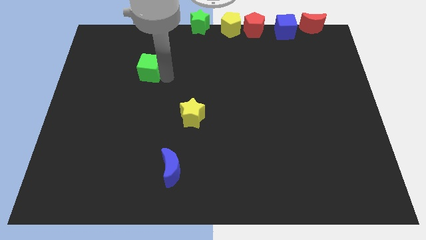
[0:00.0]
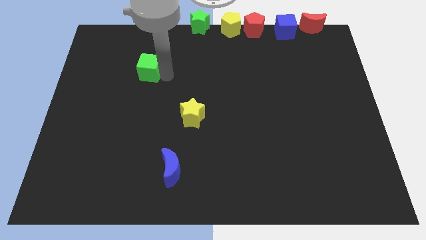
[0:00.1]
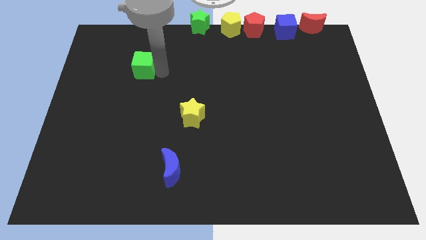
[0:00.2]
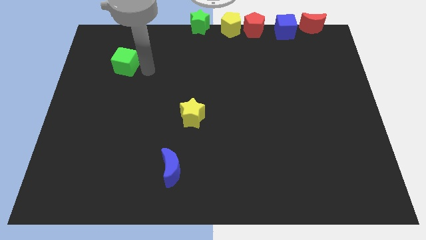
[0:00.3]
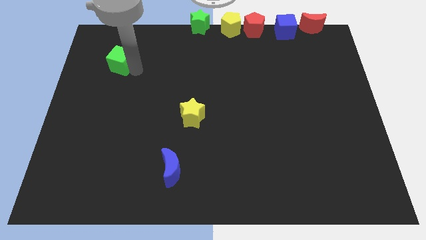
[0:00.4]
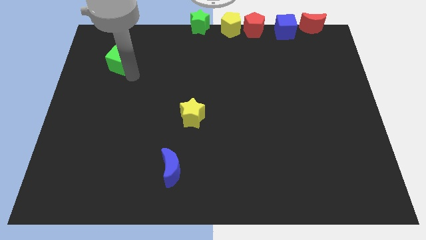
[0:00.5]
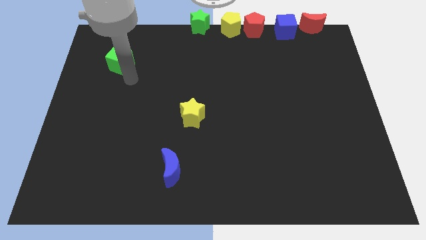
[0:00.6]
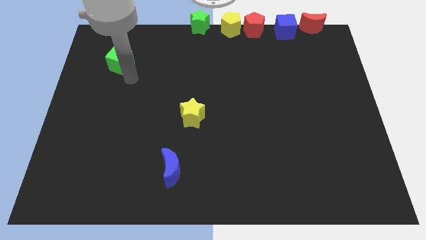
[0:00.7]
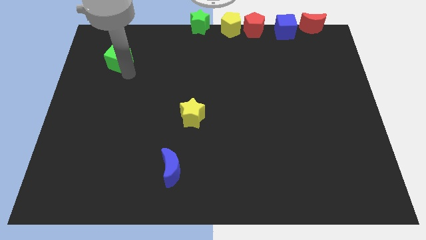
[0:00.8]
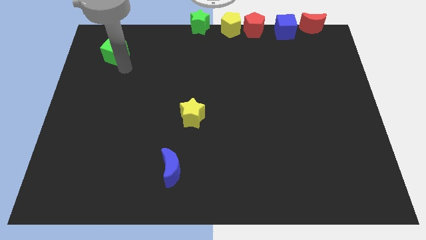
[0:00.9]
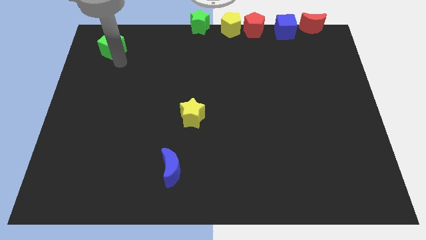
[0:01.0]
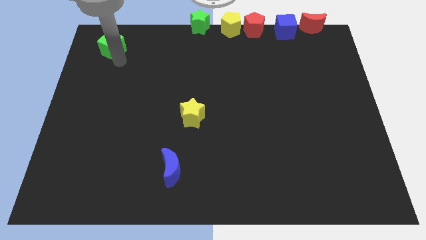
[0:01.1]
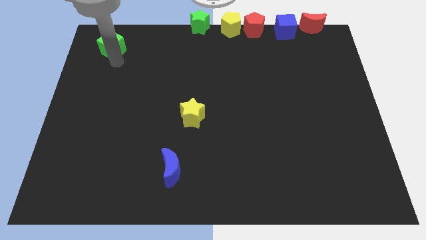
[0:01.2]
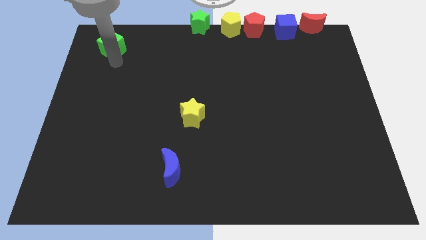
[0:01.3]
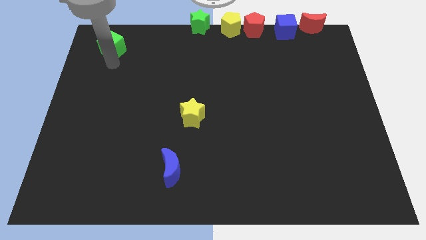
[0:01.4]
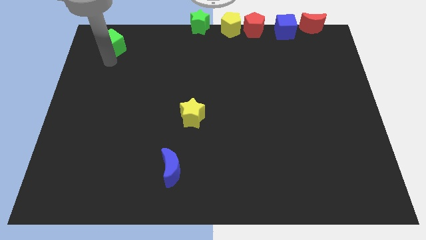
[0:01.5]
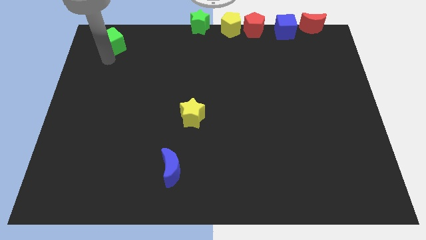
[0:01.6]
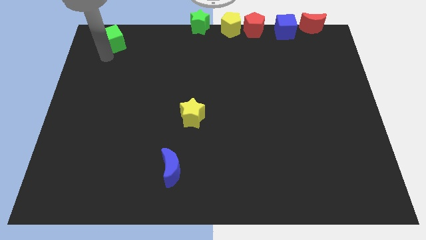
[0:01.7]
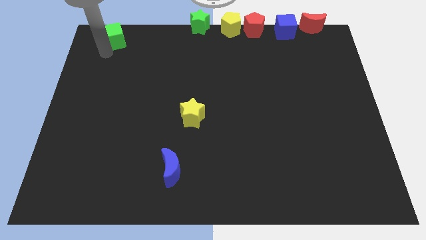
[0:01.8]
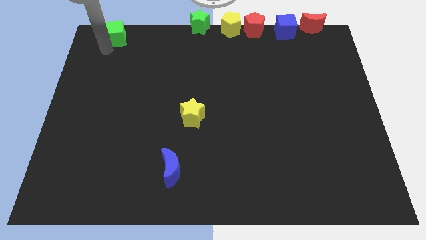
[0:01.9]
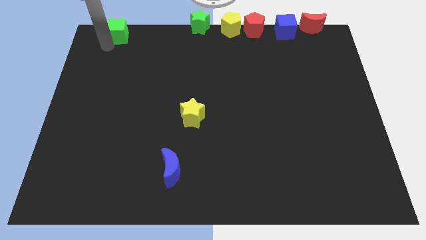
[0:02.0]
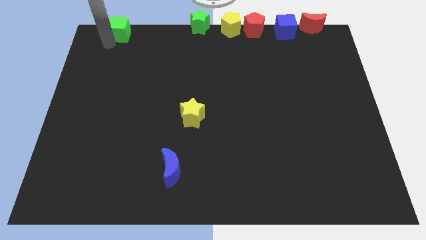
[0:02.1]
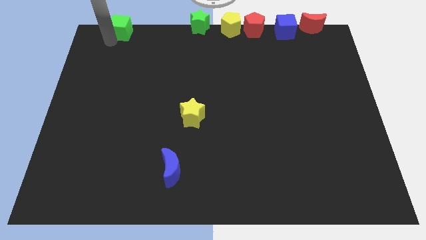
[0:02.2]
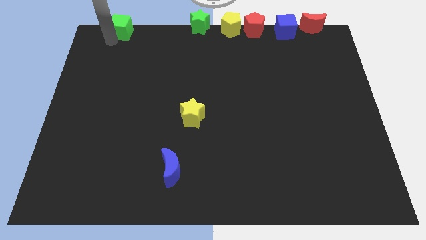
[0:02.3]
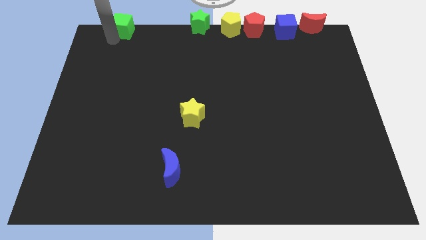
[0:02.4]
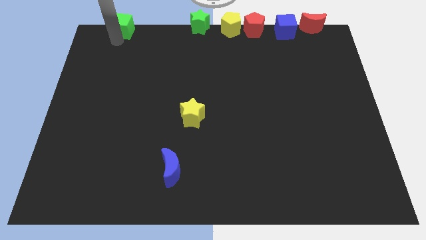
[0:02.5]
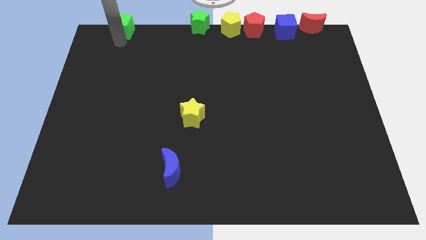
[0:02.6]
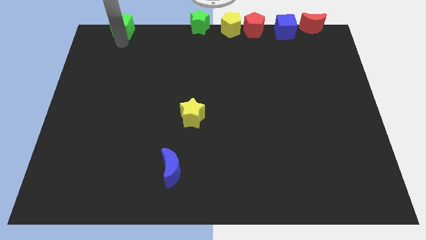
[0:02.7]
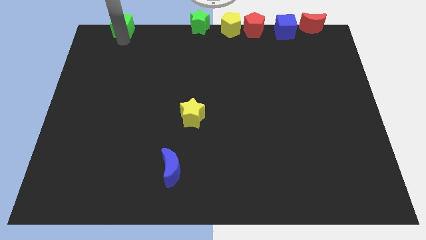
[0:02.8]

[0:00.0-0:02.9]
slide the green cube to the top left of the board

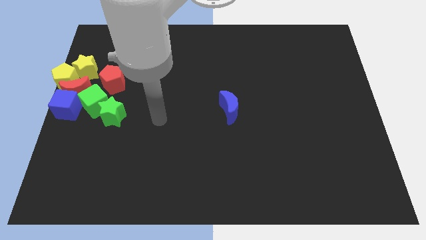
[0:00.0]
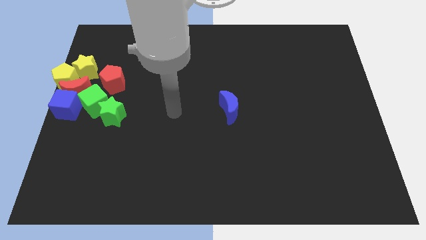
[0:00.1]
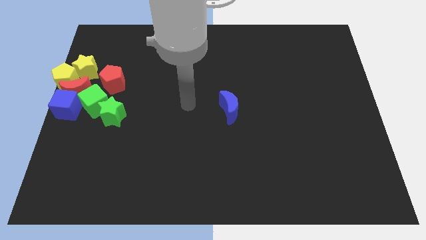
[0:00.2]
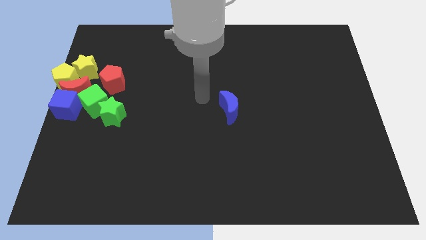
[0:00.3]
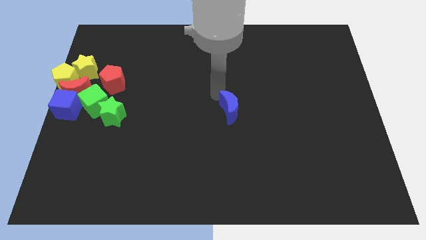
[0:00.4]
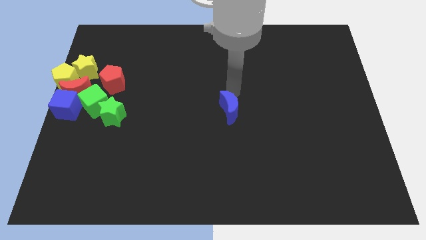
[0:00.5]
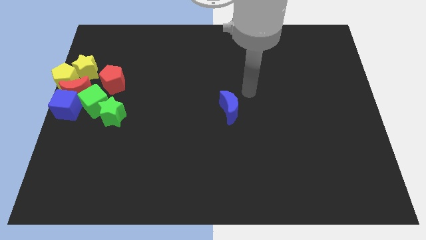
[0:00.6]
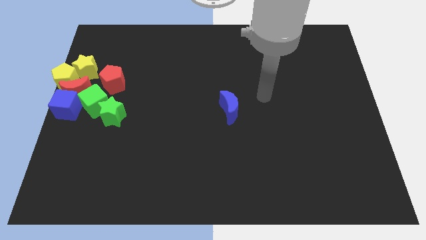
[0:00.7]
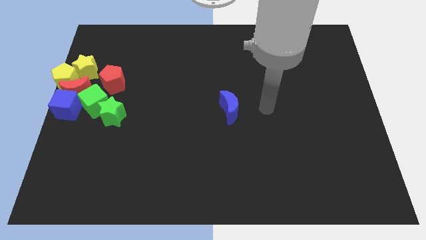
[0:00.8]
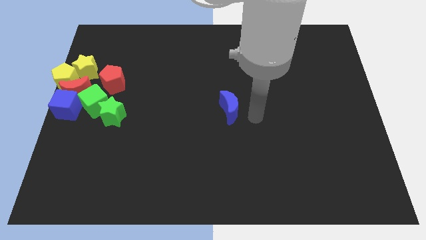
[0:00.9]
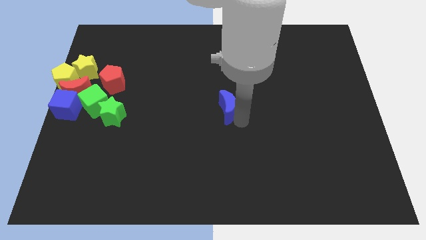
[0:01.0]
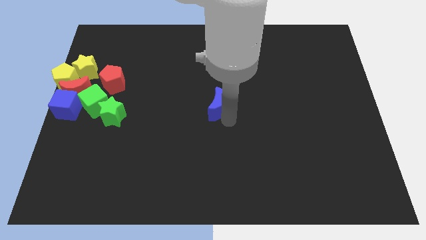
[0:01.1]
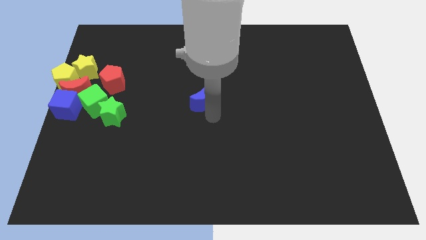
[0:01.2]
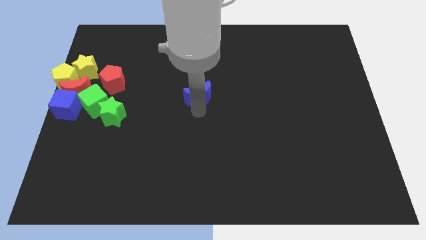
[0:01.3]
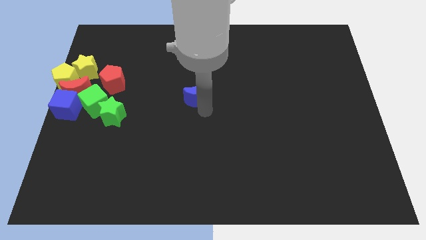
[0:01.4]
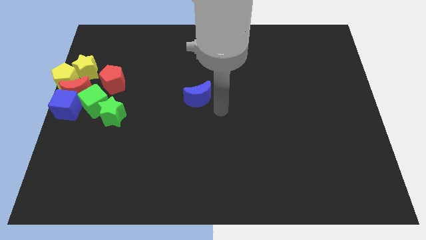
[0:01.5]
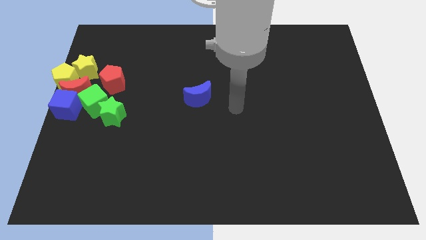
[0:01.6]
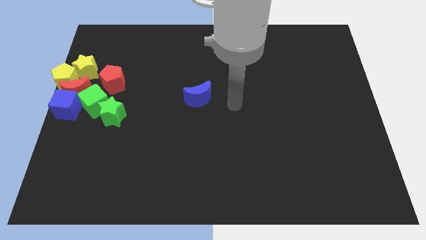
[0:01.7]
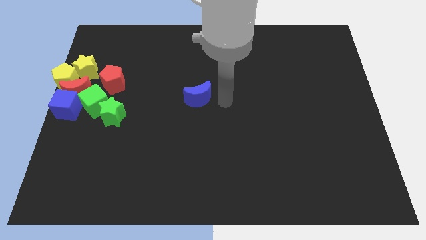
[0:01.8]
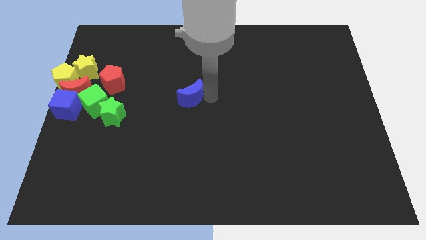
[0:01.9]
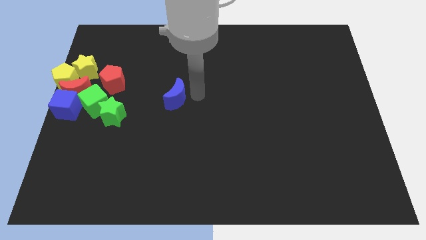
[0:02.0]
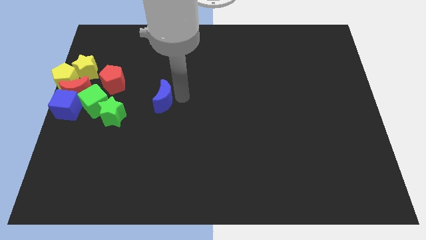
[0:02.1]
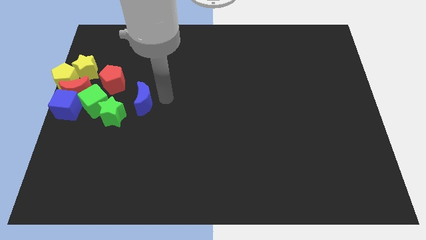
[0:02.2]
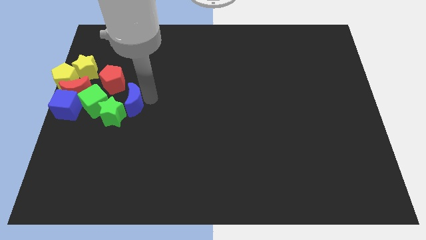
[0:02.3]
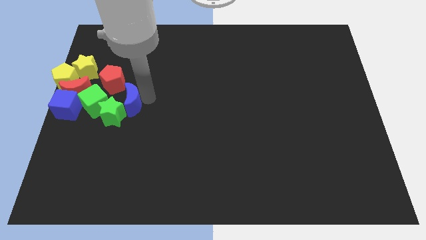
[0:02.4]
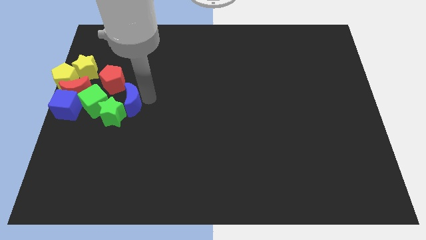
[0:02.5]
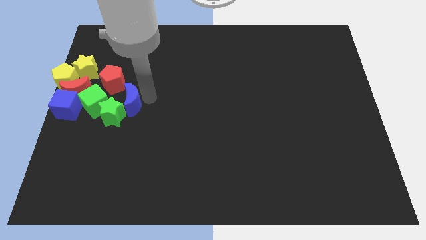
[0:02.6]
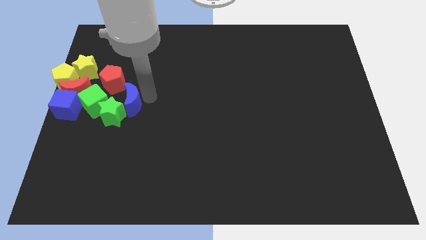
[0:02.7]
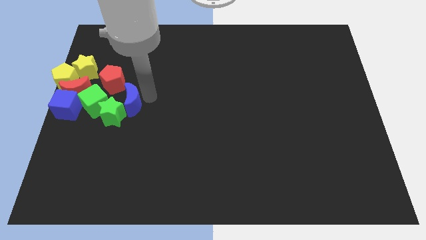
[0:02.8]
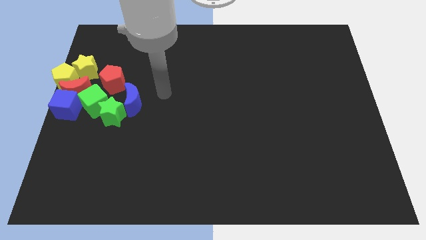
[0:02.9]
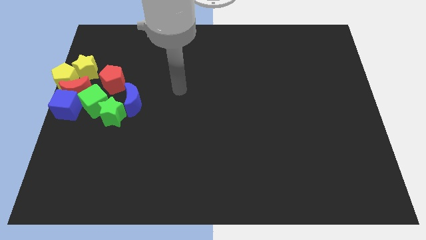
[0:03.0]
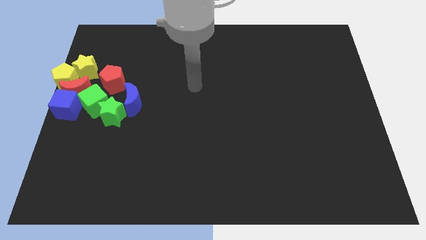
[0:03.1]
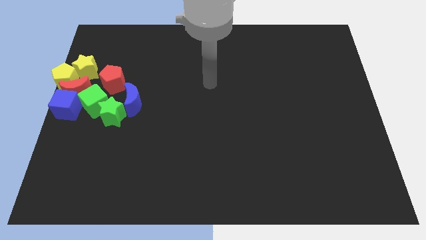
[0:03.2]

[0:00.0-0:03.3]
add the blue crescent to the group of blocks at the left center of the board

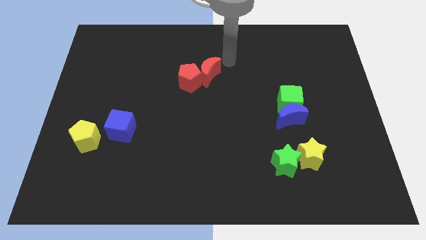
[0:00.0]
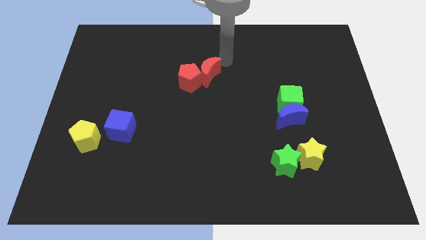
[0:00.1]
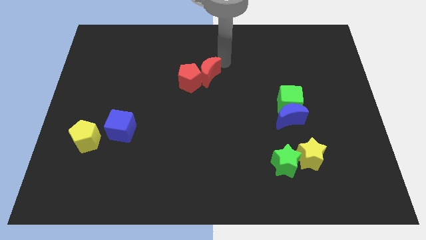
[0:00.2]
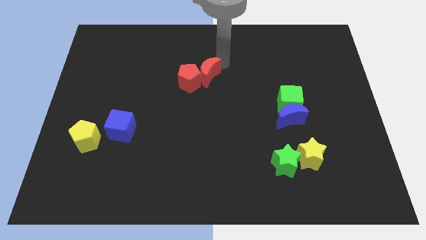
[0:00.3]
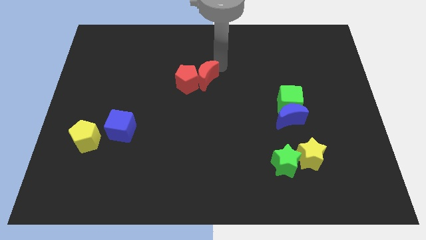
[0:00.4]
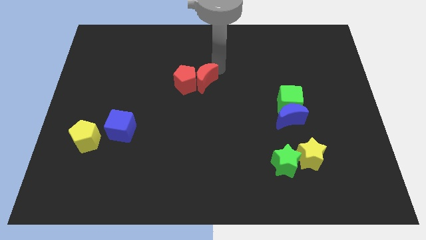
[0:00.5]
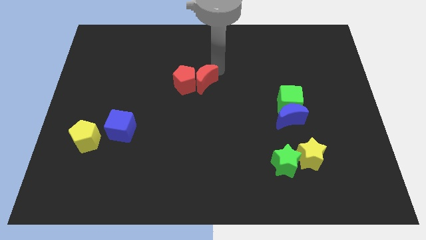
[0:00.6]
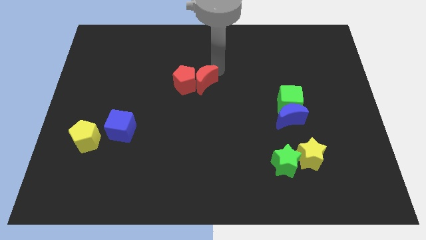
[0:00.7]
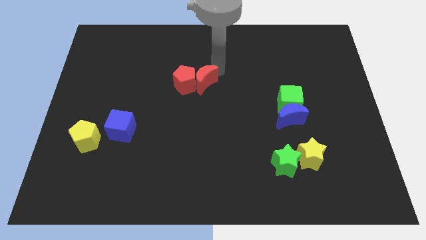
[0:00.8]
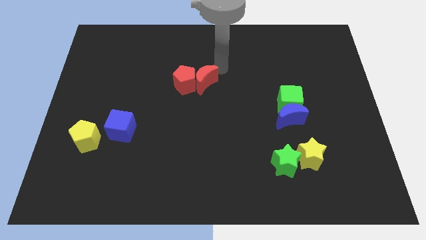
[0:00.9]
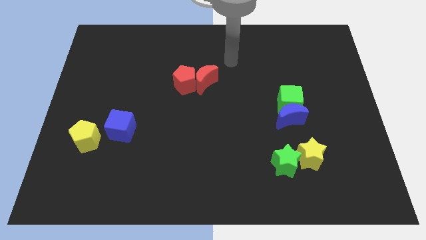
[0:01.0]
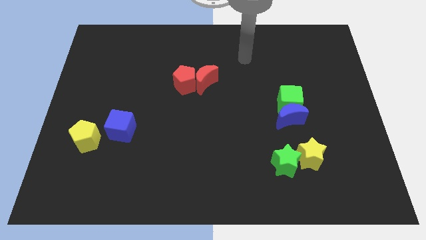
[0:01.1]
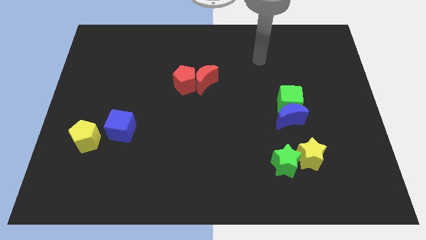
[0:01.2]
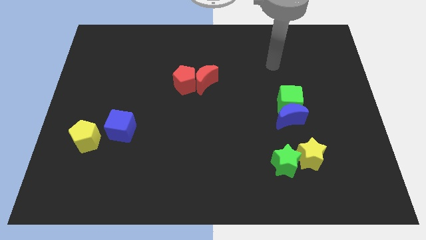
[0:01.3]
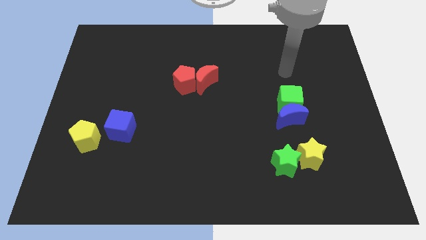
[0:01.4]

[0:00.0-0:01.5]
slightly push the red blocks towards the center

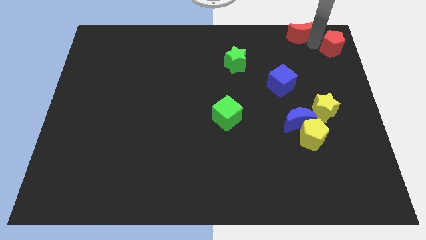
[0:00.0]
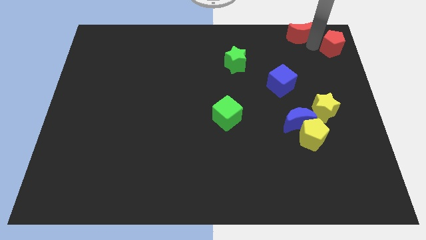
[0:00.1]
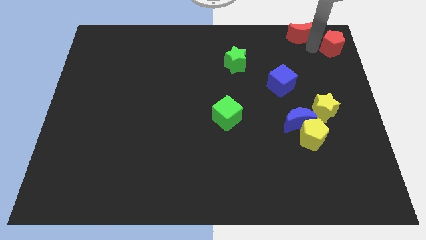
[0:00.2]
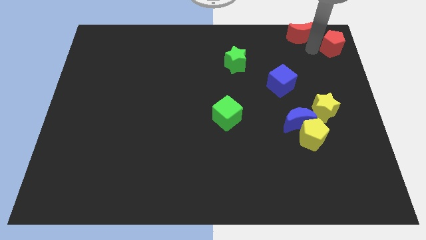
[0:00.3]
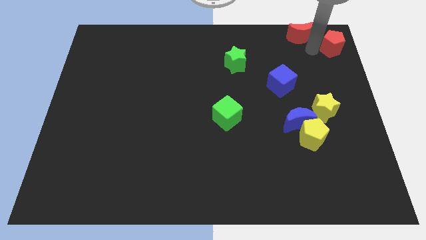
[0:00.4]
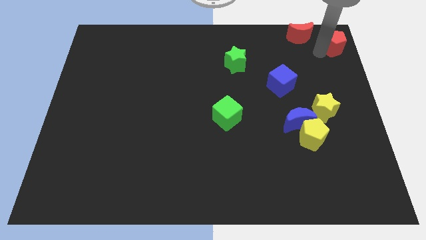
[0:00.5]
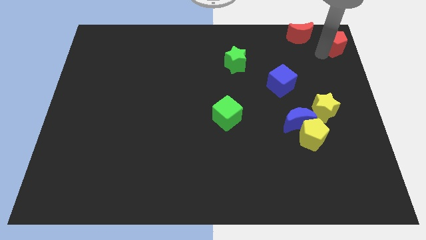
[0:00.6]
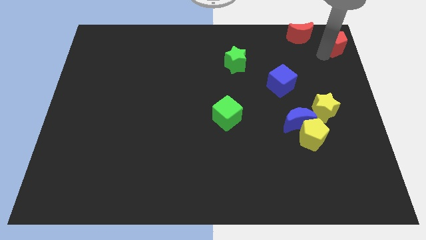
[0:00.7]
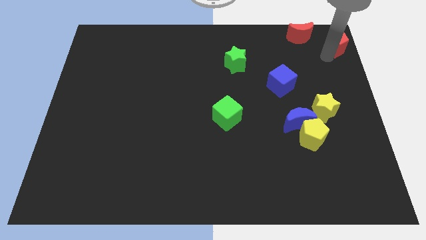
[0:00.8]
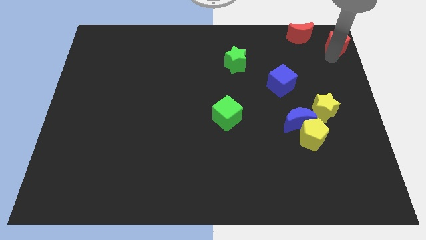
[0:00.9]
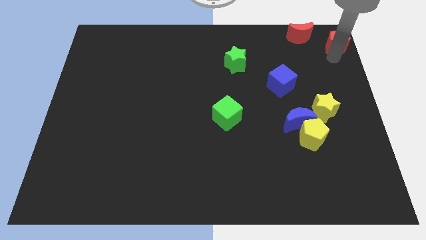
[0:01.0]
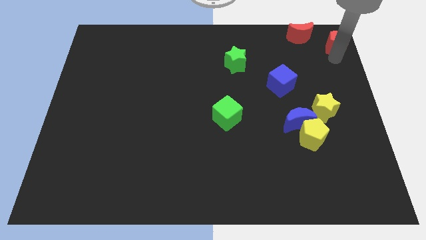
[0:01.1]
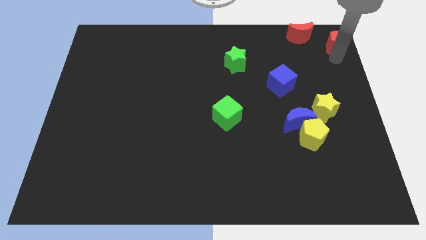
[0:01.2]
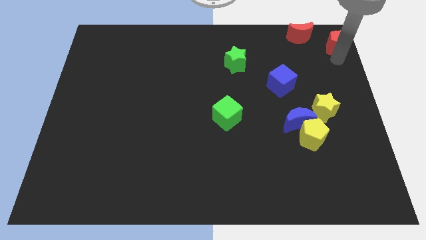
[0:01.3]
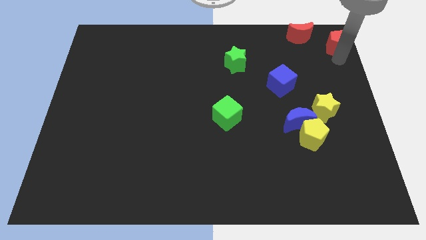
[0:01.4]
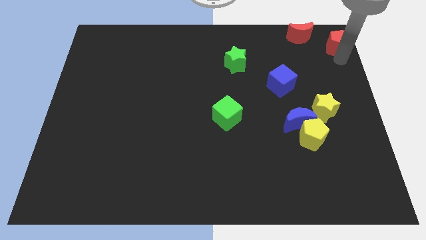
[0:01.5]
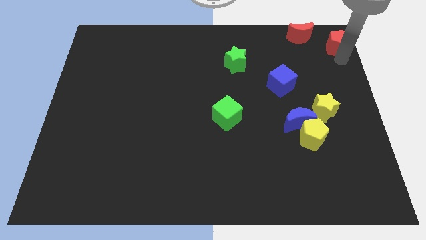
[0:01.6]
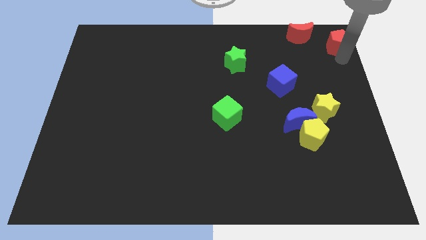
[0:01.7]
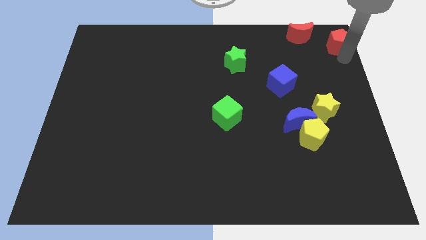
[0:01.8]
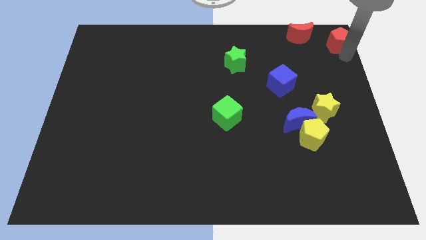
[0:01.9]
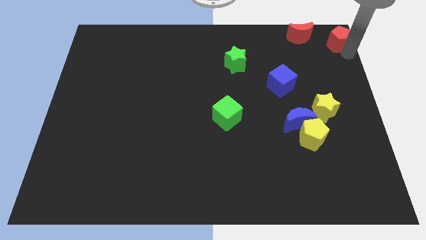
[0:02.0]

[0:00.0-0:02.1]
move the red pentagon to the top right of the board
